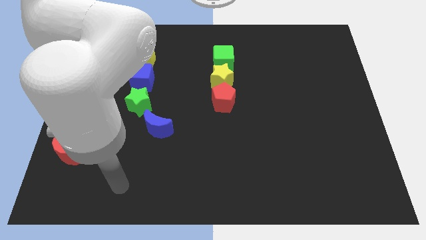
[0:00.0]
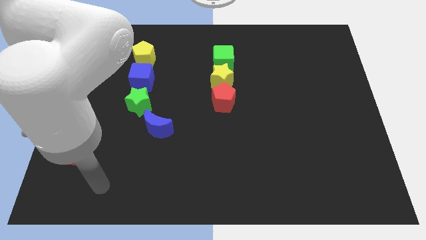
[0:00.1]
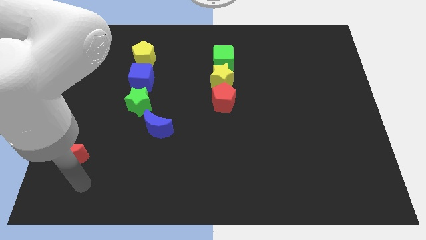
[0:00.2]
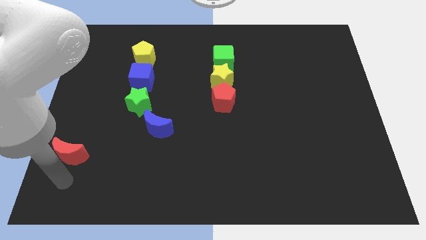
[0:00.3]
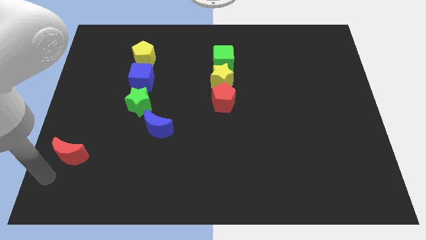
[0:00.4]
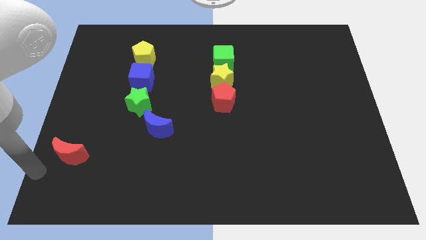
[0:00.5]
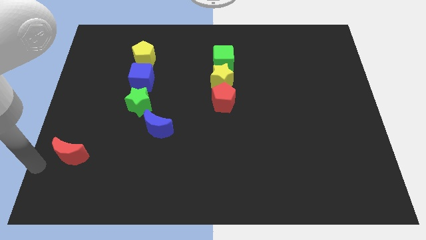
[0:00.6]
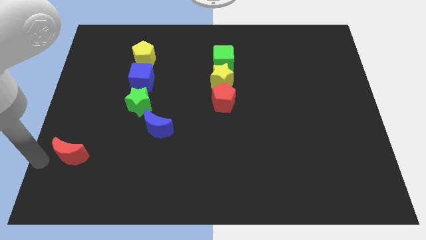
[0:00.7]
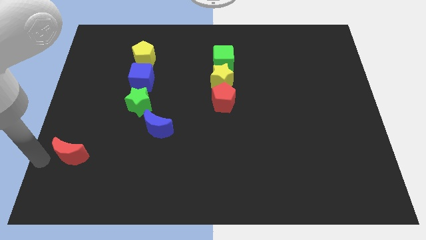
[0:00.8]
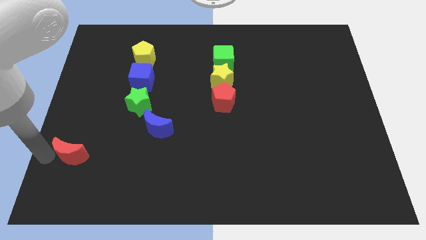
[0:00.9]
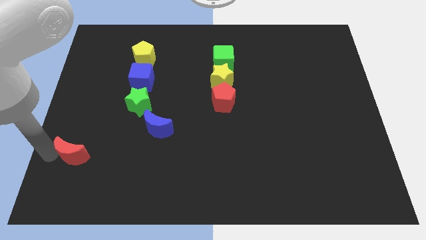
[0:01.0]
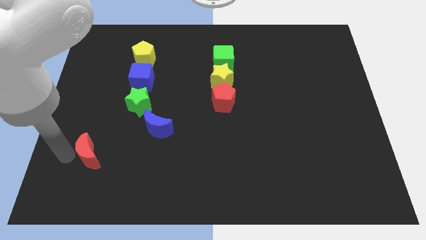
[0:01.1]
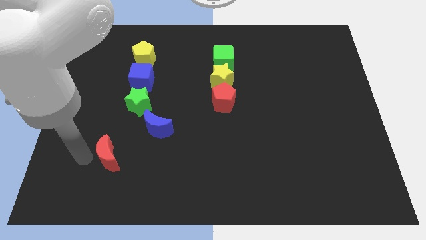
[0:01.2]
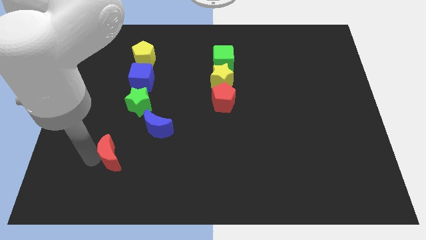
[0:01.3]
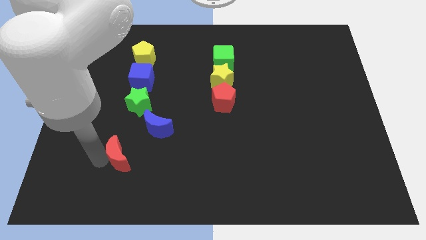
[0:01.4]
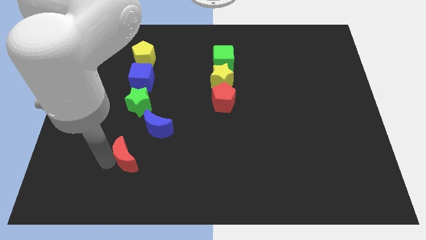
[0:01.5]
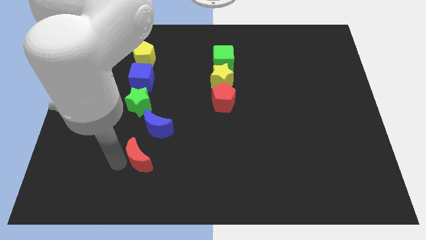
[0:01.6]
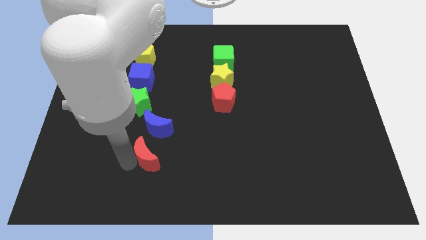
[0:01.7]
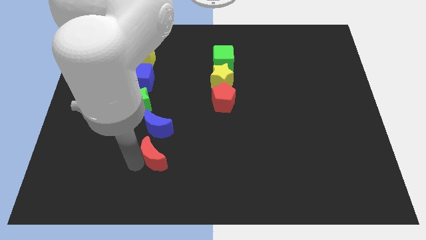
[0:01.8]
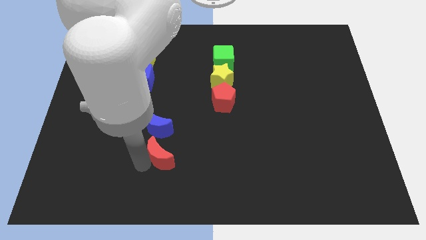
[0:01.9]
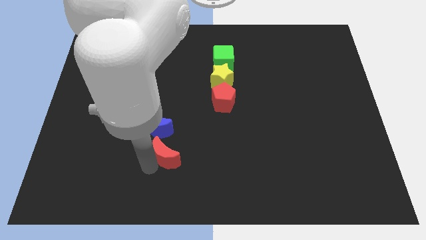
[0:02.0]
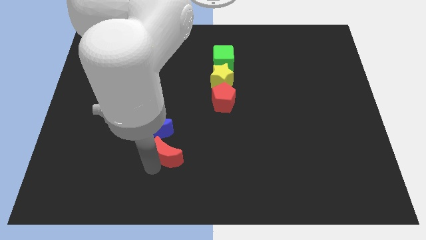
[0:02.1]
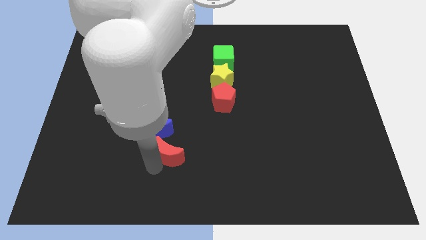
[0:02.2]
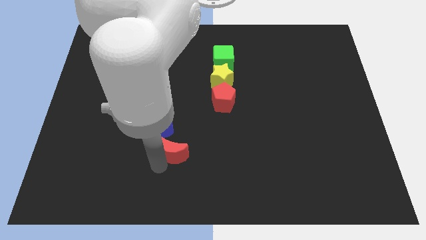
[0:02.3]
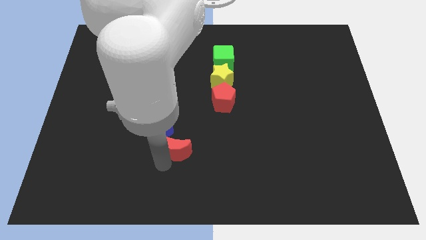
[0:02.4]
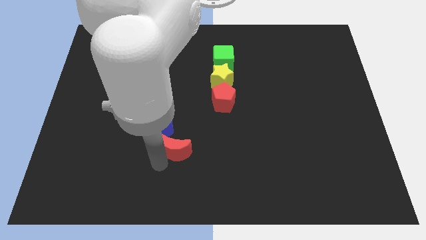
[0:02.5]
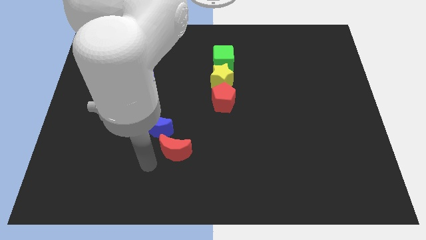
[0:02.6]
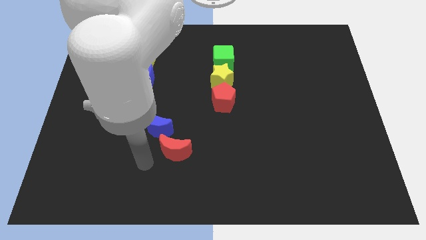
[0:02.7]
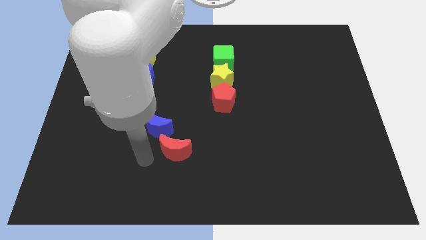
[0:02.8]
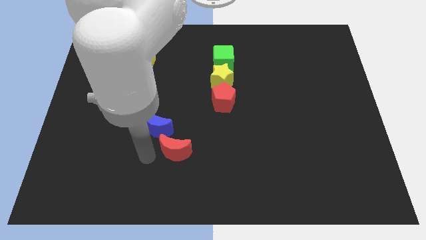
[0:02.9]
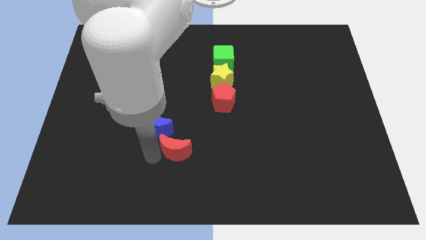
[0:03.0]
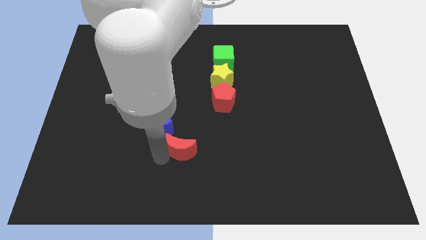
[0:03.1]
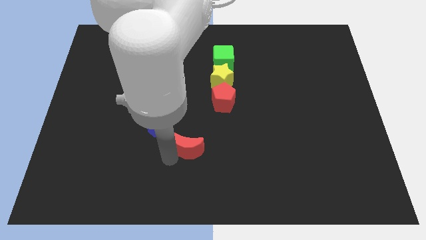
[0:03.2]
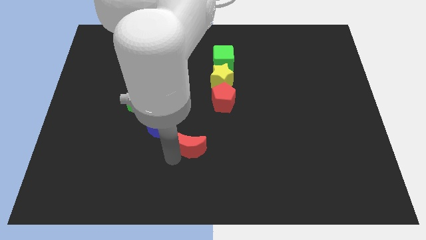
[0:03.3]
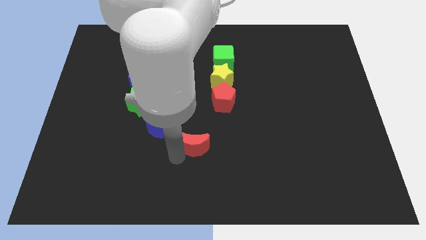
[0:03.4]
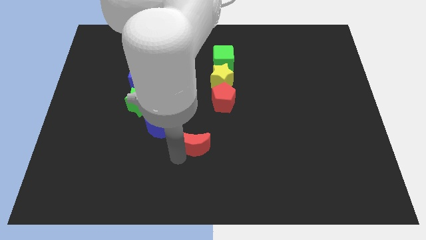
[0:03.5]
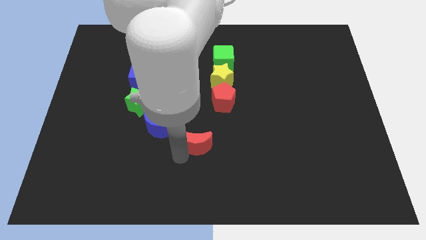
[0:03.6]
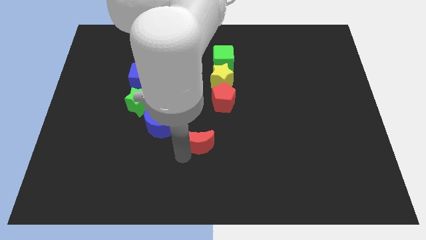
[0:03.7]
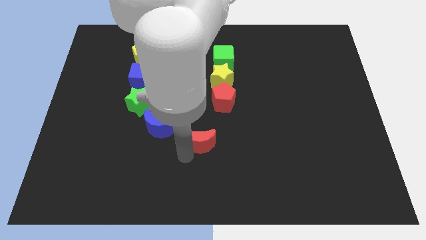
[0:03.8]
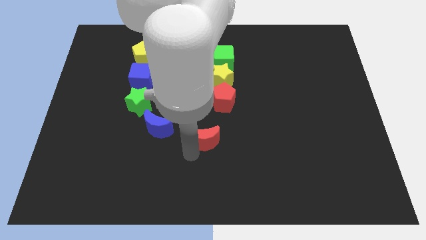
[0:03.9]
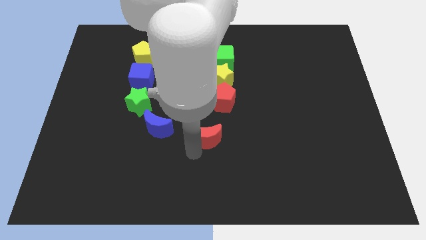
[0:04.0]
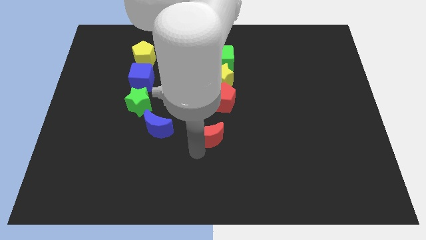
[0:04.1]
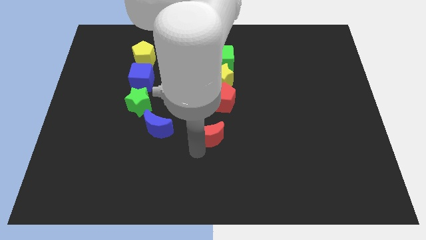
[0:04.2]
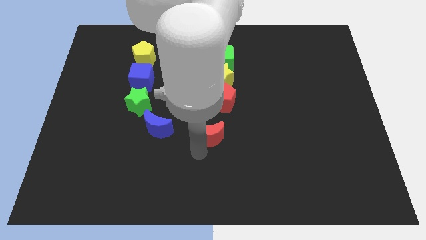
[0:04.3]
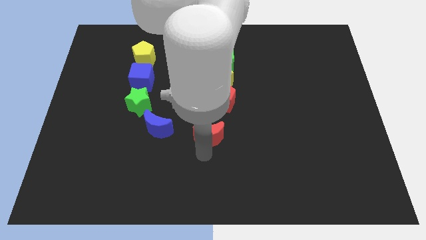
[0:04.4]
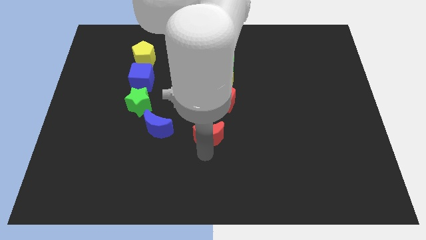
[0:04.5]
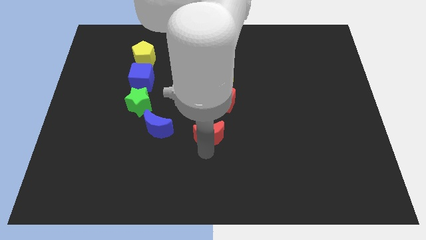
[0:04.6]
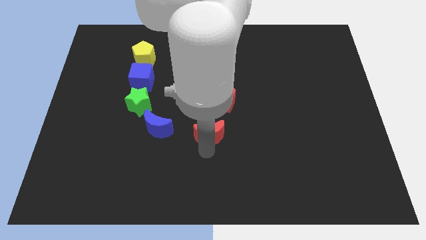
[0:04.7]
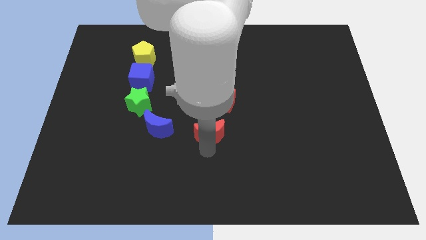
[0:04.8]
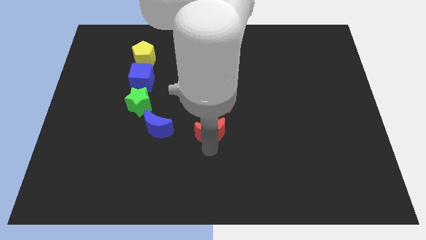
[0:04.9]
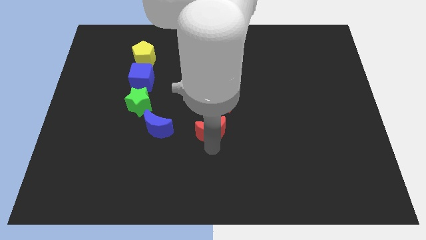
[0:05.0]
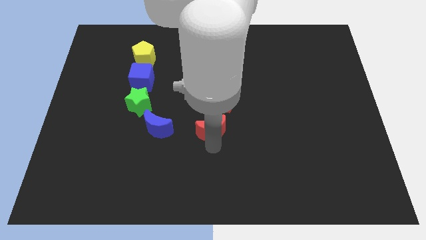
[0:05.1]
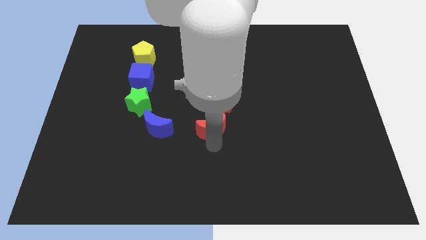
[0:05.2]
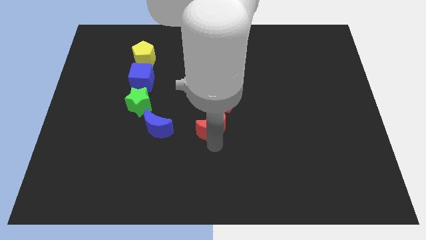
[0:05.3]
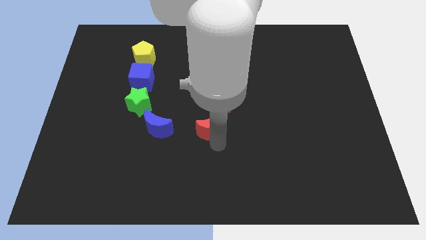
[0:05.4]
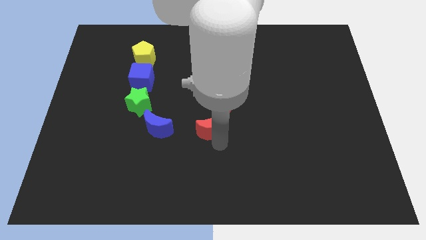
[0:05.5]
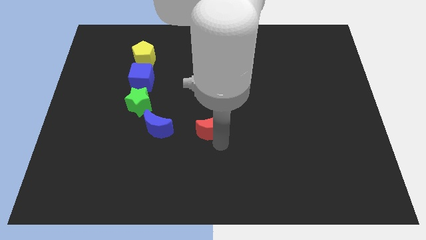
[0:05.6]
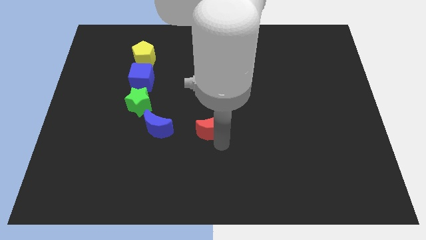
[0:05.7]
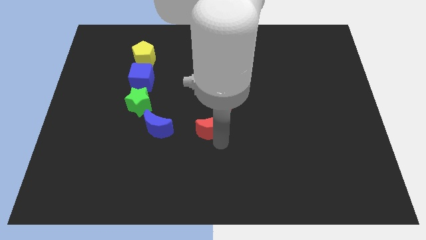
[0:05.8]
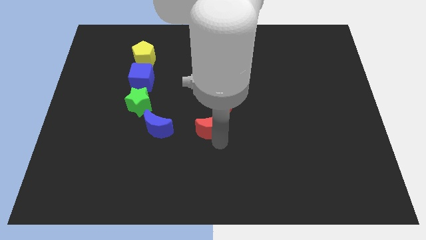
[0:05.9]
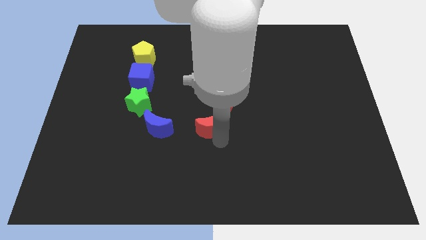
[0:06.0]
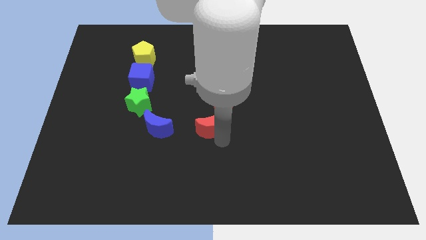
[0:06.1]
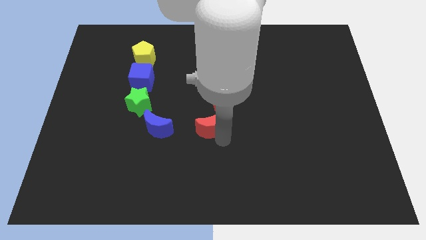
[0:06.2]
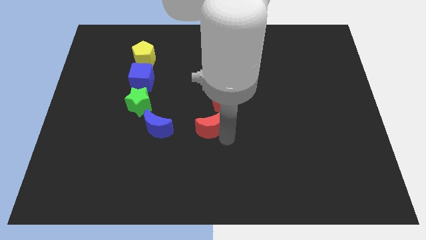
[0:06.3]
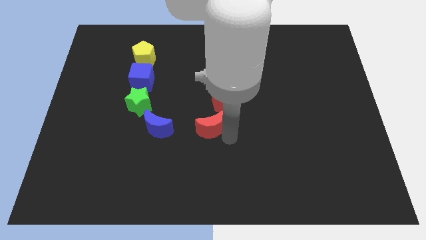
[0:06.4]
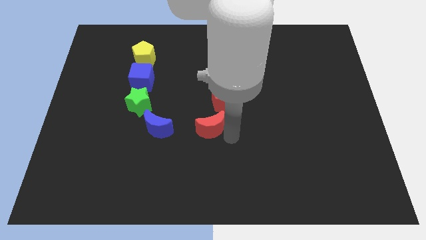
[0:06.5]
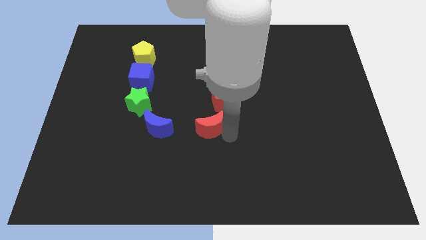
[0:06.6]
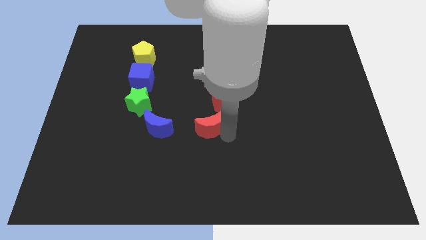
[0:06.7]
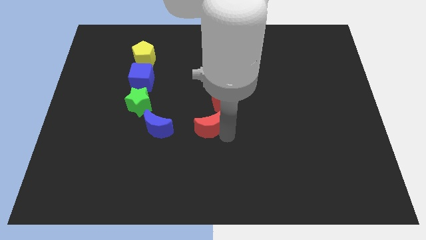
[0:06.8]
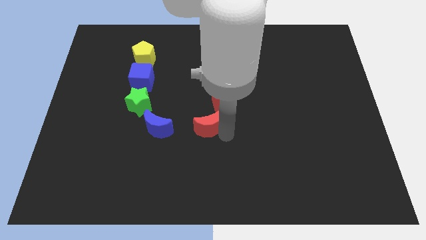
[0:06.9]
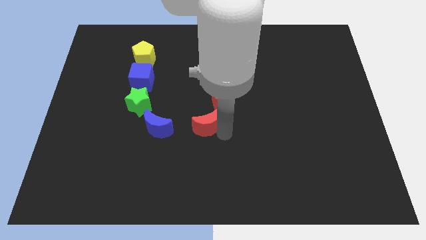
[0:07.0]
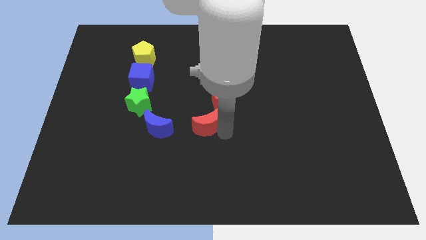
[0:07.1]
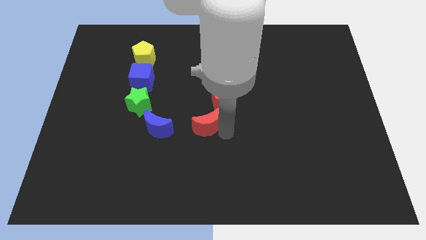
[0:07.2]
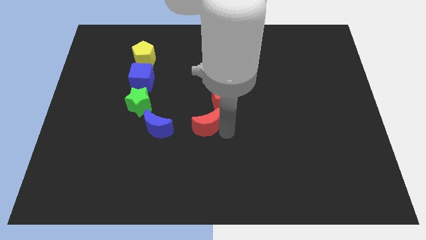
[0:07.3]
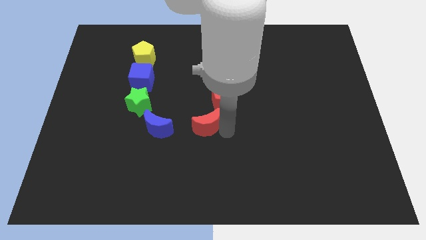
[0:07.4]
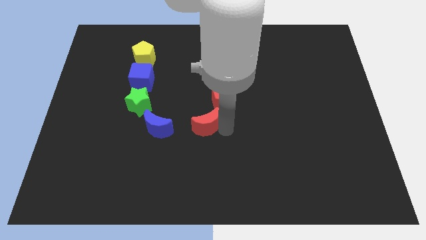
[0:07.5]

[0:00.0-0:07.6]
push the red crescent towards red pentagon

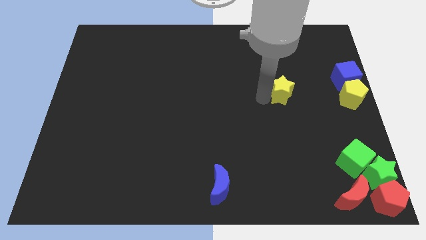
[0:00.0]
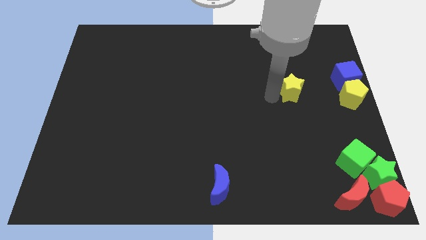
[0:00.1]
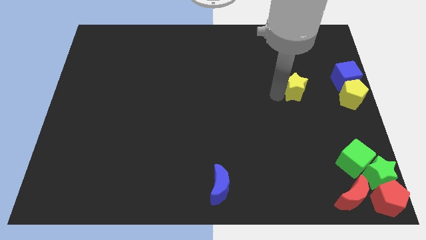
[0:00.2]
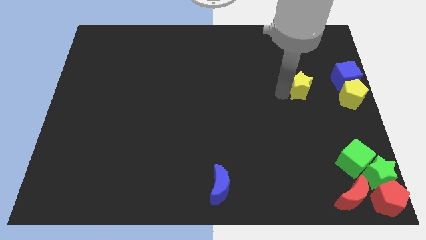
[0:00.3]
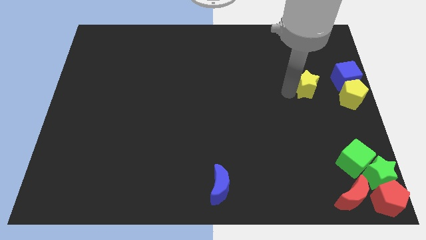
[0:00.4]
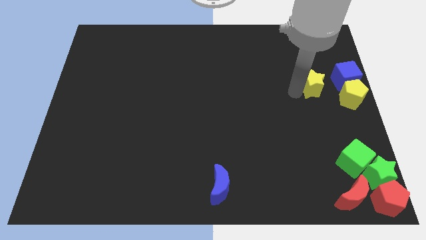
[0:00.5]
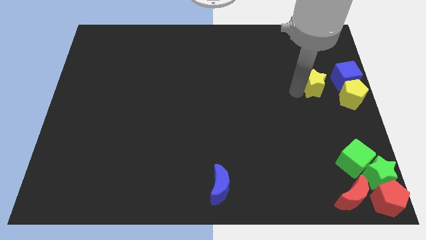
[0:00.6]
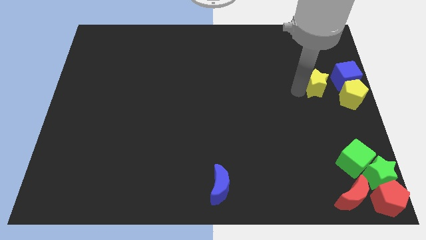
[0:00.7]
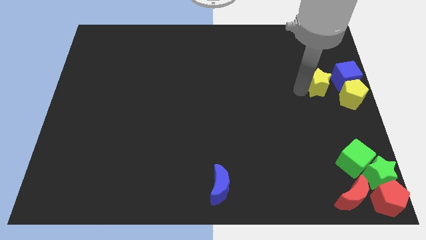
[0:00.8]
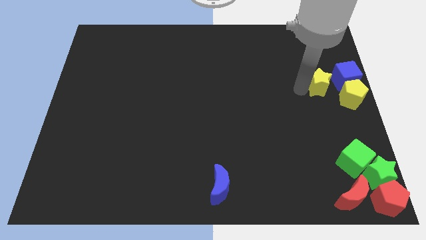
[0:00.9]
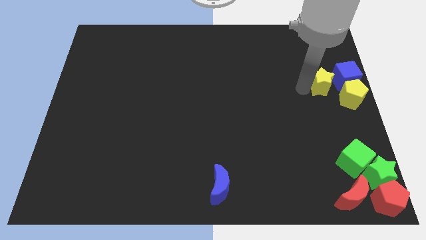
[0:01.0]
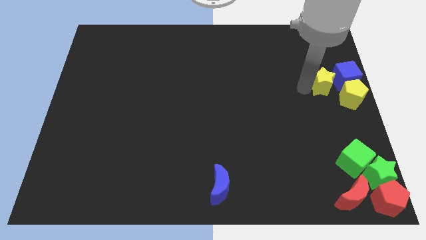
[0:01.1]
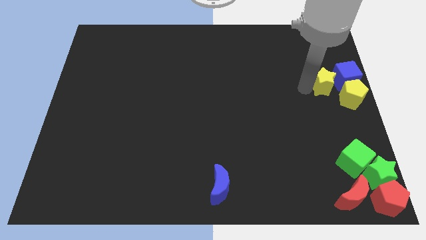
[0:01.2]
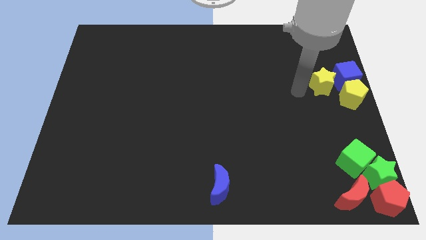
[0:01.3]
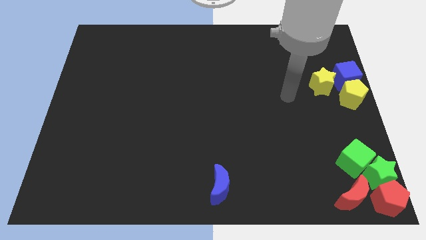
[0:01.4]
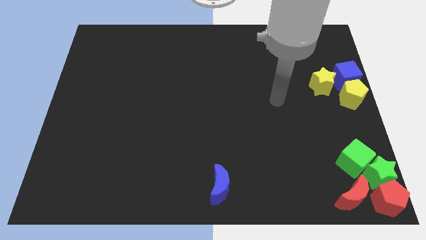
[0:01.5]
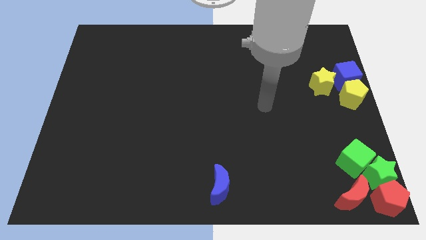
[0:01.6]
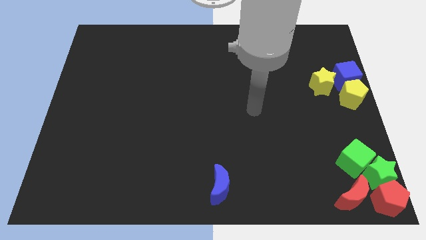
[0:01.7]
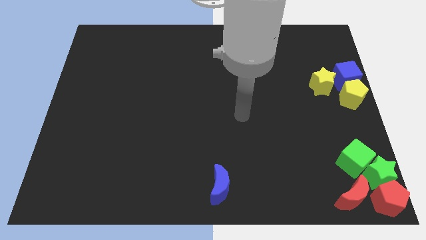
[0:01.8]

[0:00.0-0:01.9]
move the yellow star to the left of the blue cube
